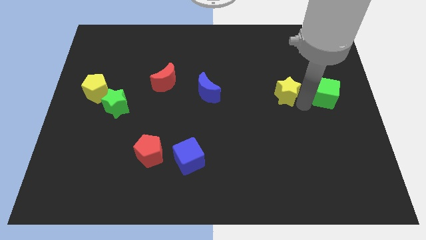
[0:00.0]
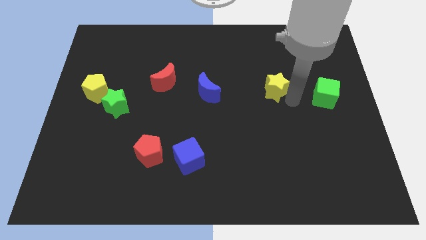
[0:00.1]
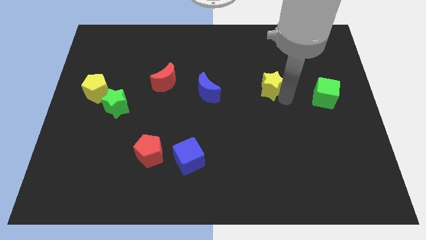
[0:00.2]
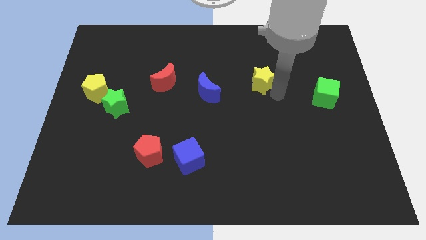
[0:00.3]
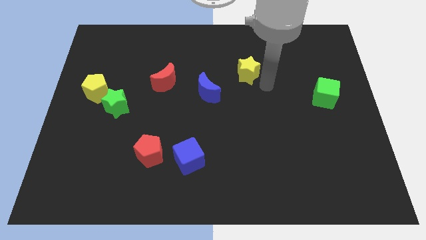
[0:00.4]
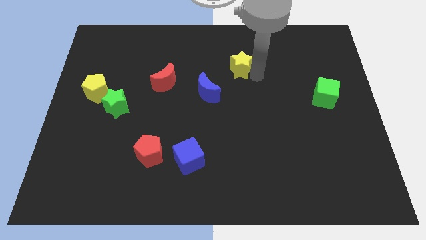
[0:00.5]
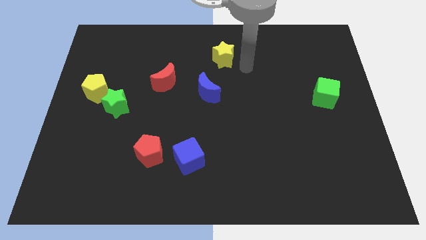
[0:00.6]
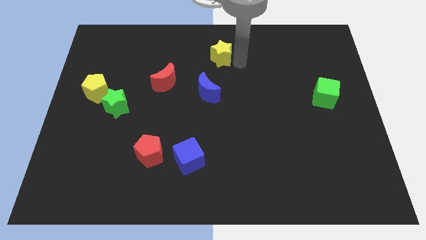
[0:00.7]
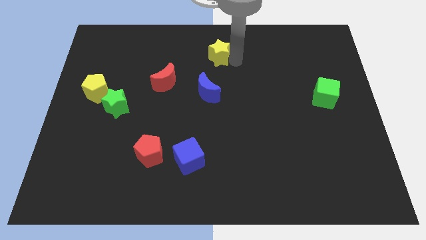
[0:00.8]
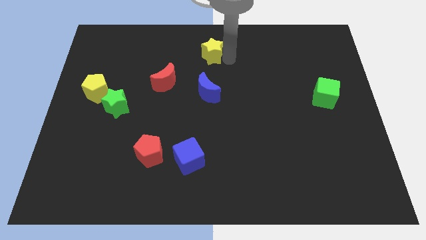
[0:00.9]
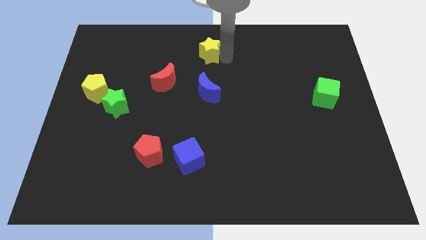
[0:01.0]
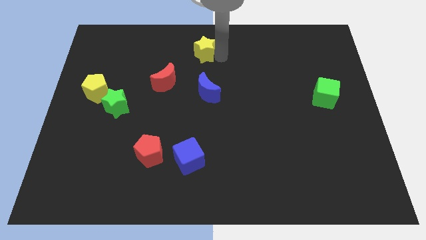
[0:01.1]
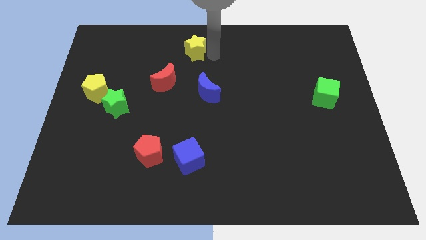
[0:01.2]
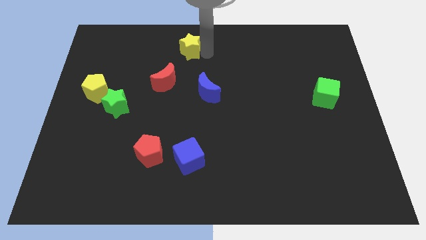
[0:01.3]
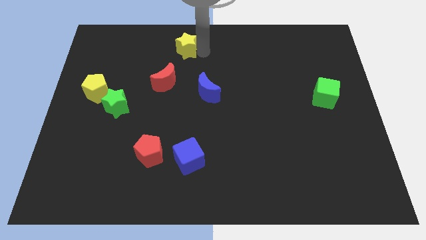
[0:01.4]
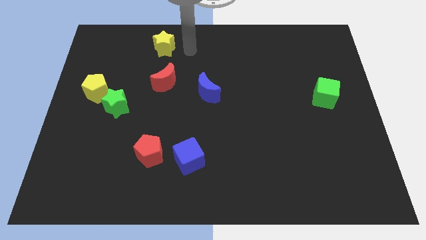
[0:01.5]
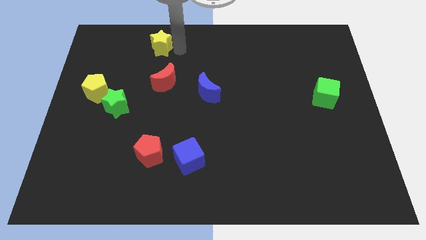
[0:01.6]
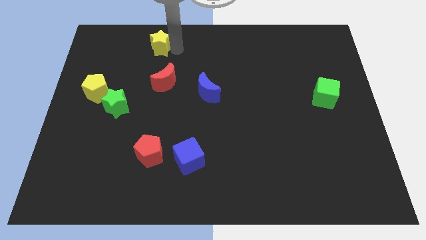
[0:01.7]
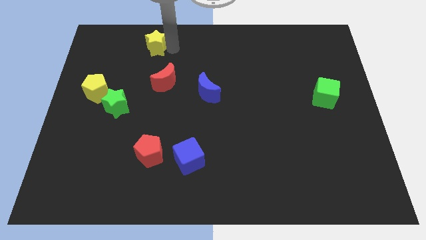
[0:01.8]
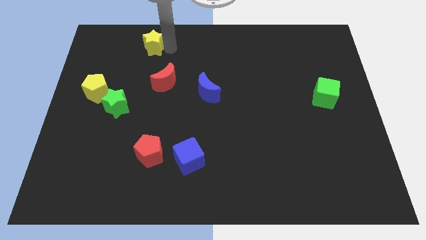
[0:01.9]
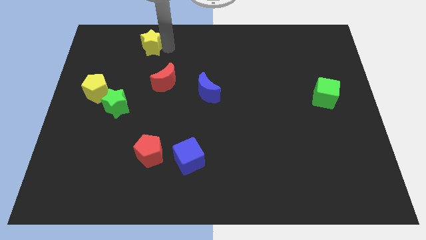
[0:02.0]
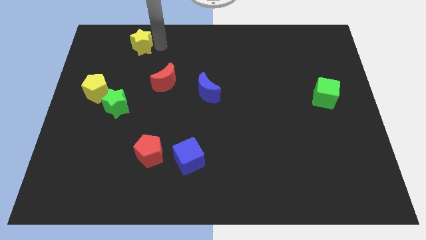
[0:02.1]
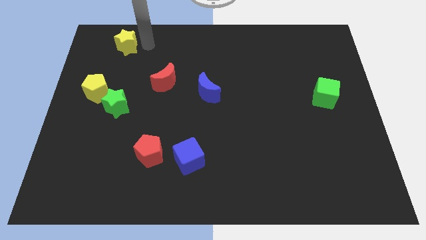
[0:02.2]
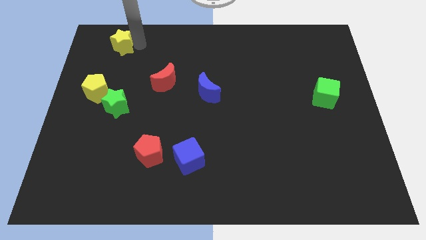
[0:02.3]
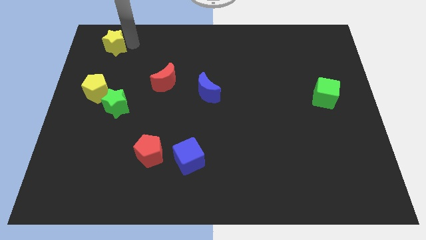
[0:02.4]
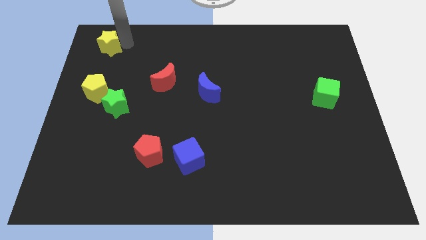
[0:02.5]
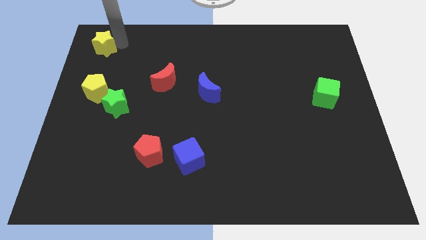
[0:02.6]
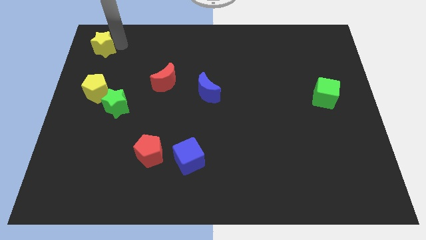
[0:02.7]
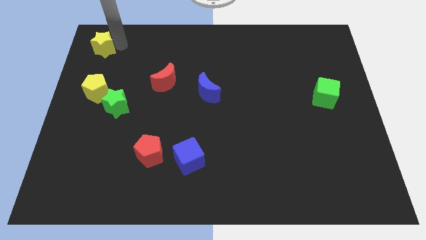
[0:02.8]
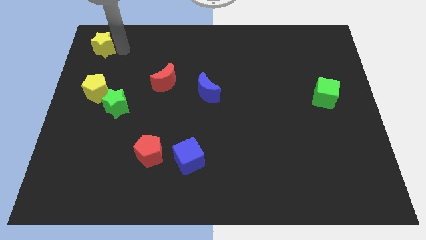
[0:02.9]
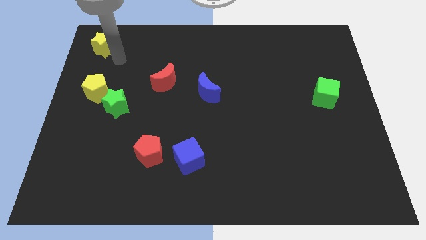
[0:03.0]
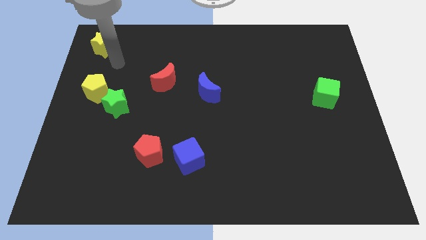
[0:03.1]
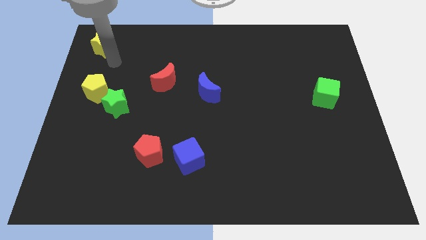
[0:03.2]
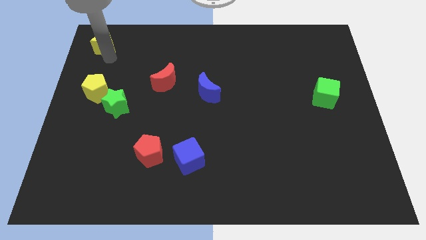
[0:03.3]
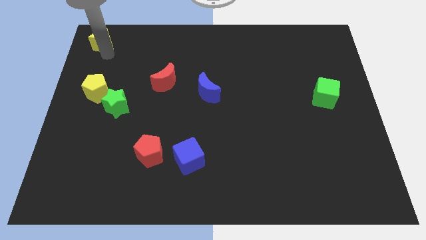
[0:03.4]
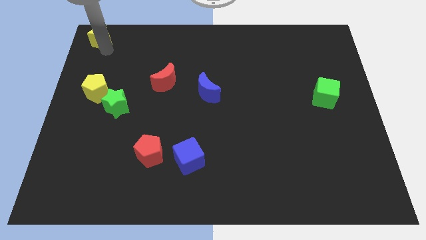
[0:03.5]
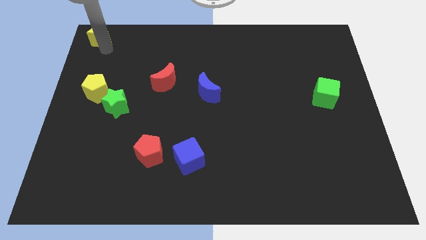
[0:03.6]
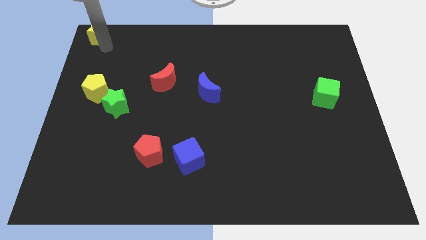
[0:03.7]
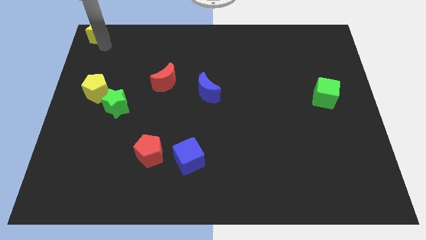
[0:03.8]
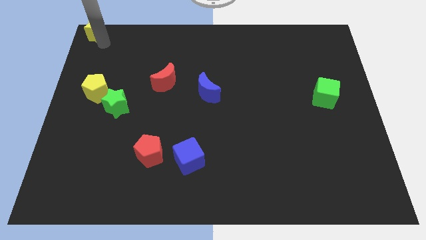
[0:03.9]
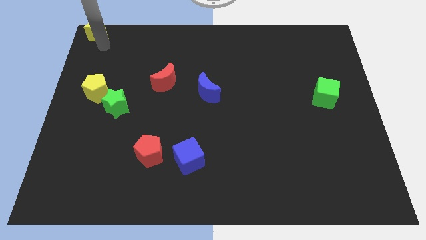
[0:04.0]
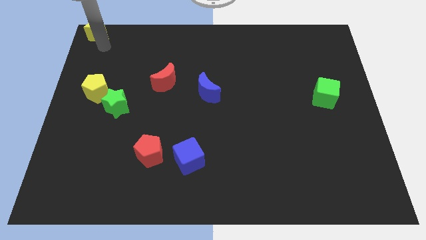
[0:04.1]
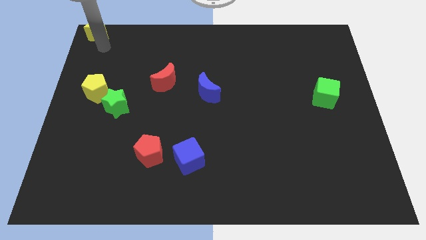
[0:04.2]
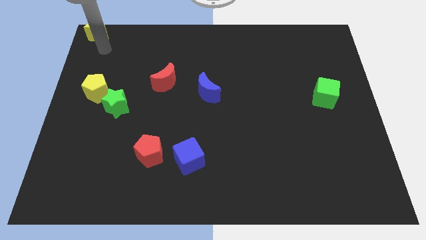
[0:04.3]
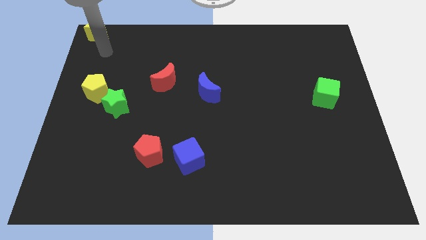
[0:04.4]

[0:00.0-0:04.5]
put the yellow star at the top left corner

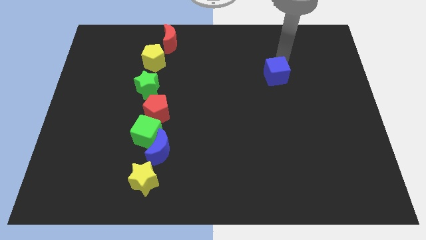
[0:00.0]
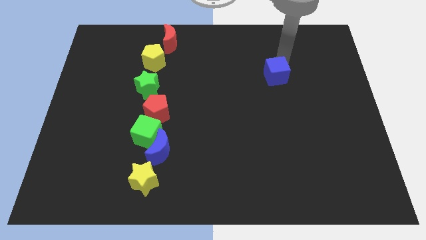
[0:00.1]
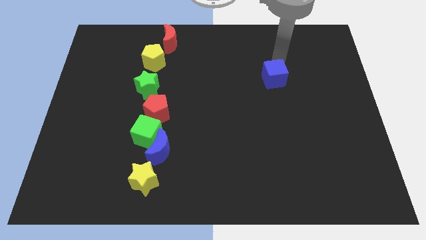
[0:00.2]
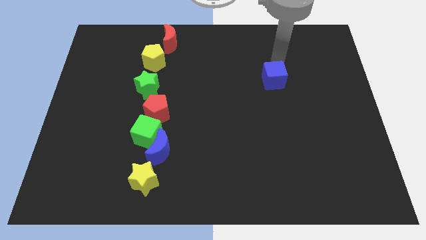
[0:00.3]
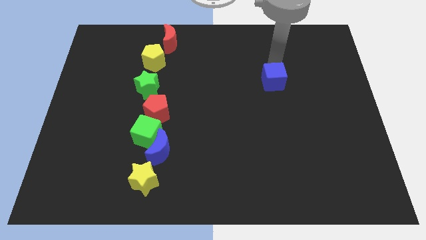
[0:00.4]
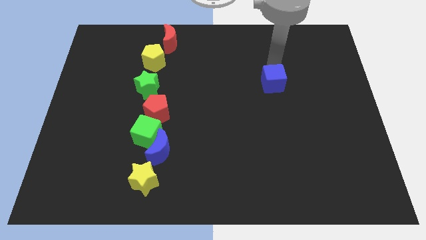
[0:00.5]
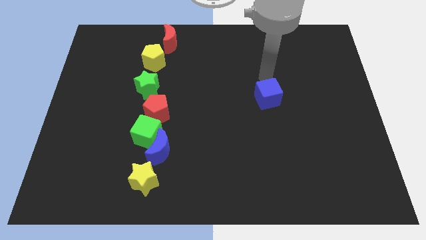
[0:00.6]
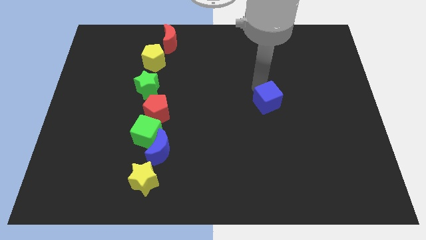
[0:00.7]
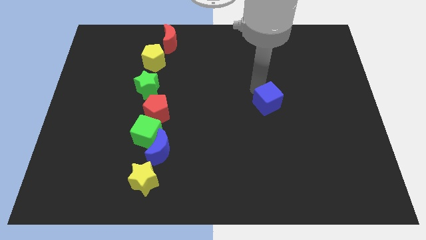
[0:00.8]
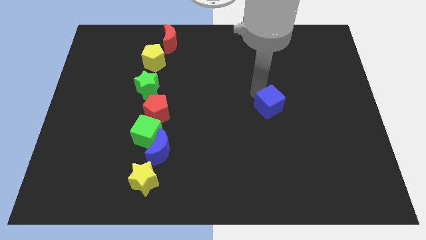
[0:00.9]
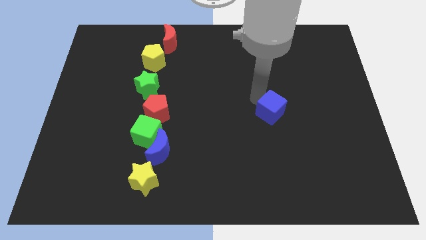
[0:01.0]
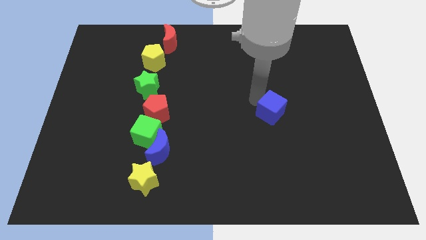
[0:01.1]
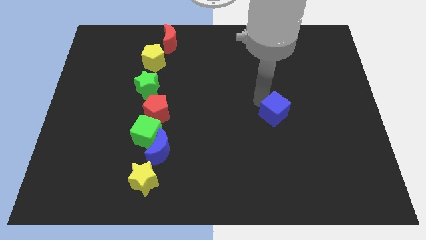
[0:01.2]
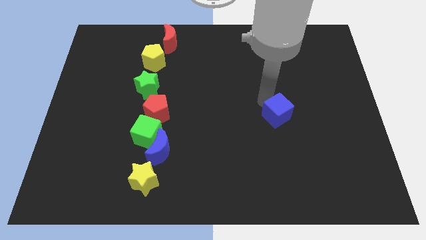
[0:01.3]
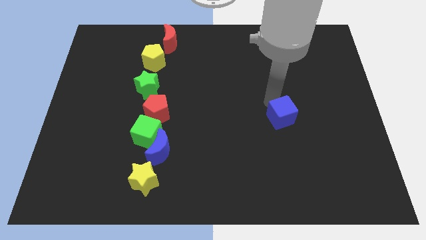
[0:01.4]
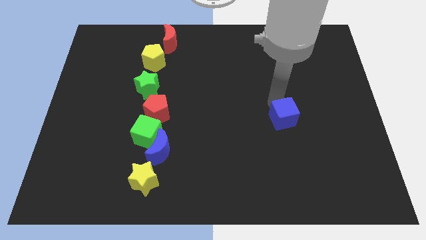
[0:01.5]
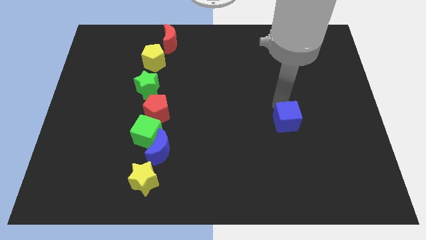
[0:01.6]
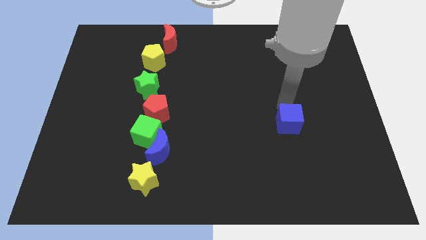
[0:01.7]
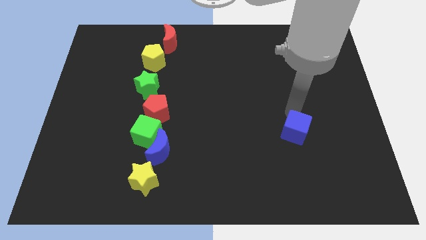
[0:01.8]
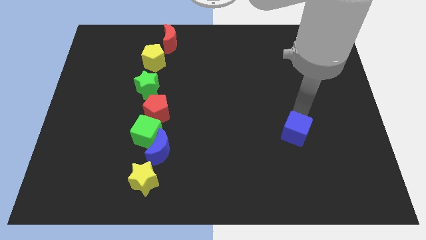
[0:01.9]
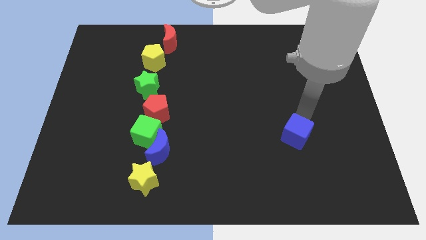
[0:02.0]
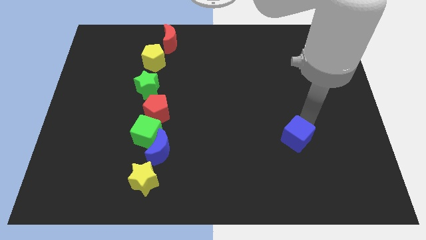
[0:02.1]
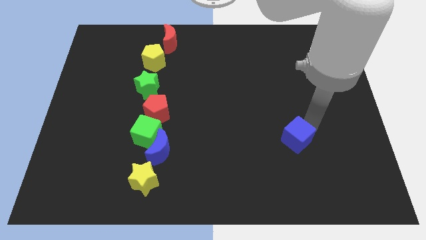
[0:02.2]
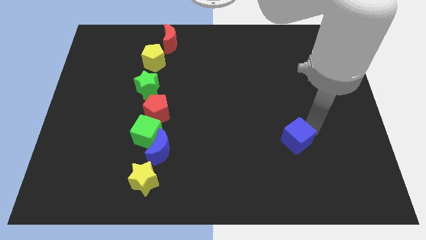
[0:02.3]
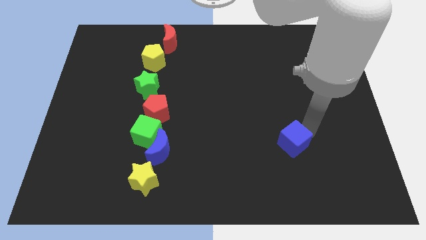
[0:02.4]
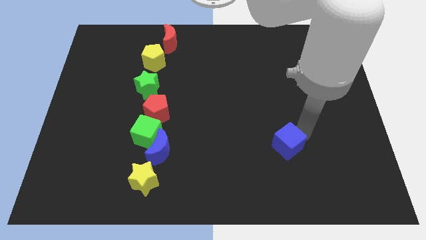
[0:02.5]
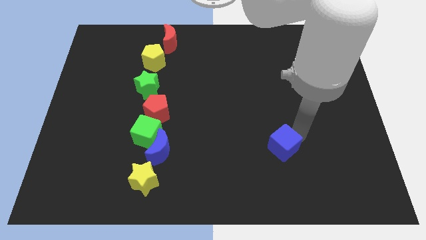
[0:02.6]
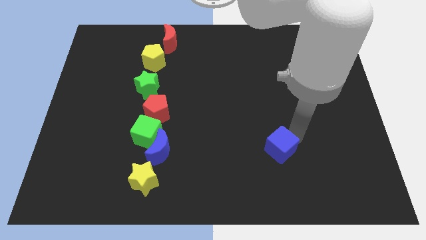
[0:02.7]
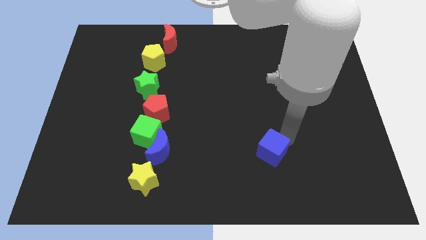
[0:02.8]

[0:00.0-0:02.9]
push the blue cube to the right of the blue crescent

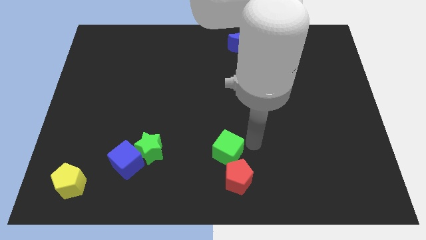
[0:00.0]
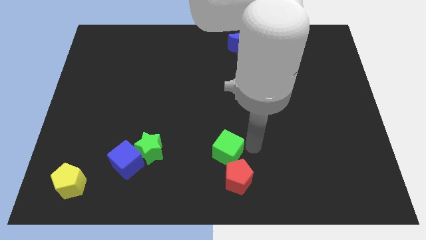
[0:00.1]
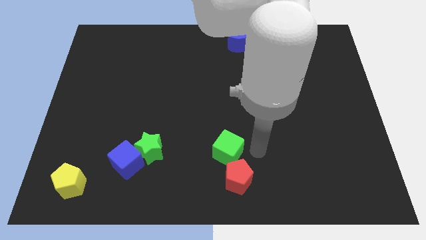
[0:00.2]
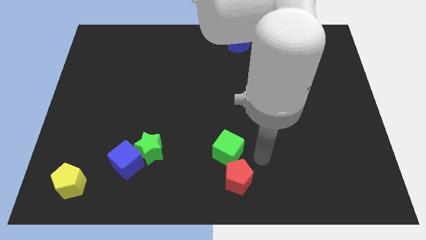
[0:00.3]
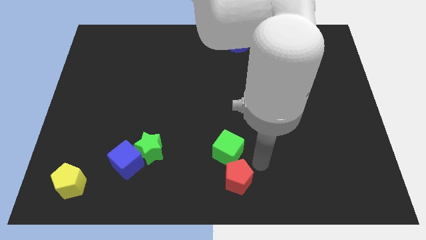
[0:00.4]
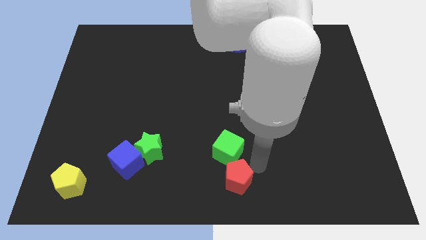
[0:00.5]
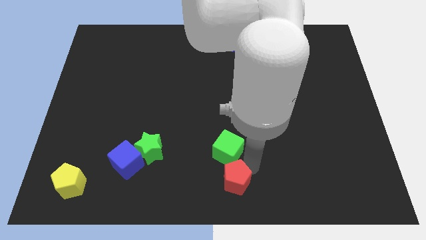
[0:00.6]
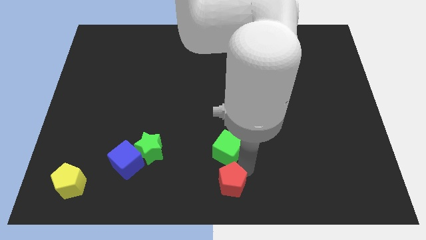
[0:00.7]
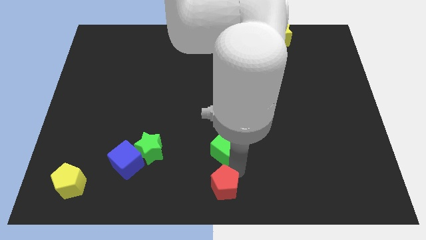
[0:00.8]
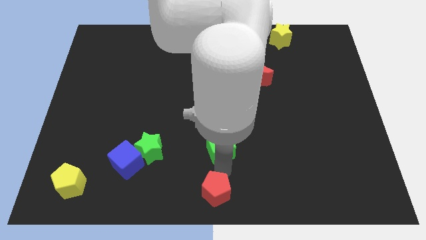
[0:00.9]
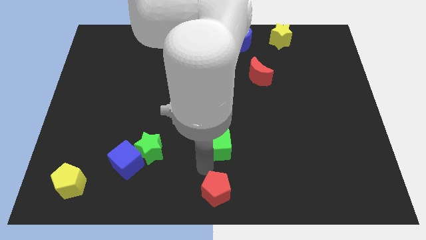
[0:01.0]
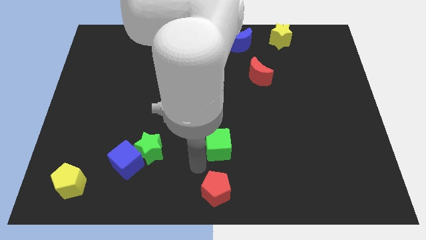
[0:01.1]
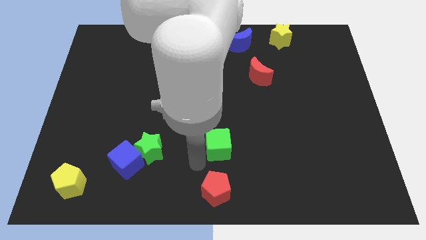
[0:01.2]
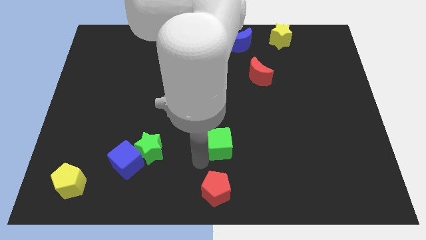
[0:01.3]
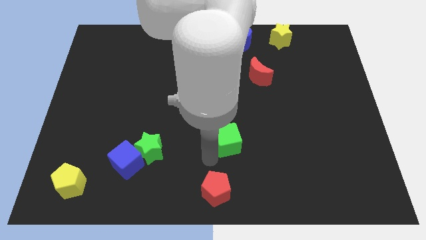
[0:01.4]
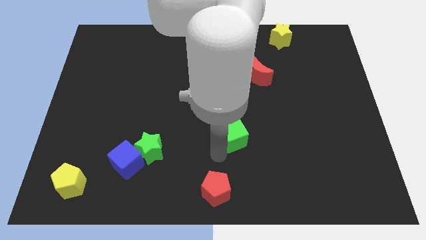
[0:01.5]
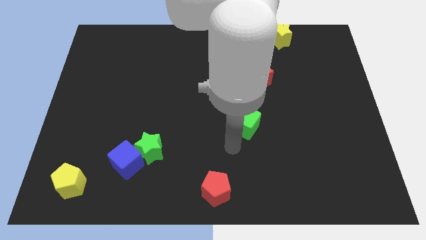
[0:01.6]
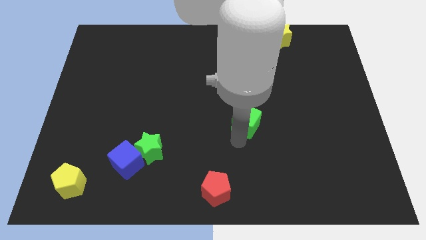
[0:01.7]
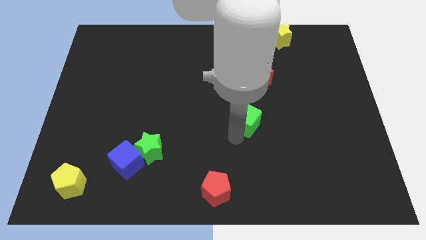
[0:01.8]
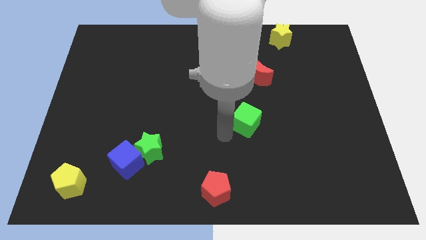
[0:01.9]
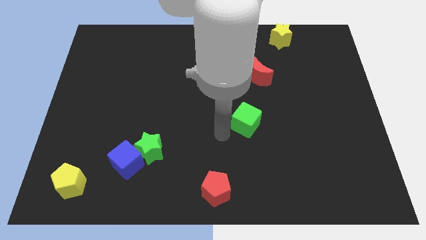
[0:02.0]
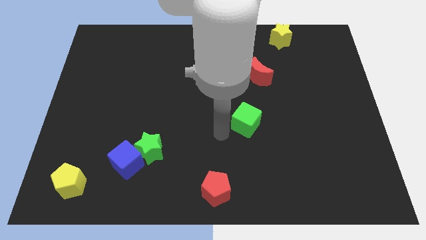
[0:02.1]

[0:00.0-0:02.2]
separate the green cube from the red pentagon
